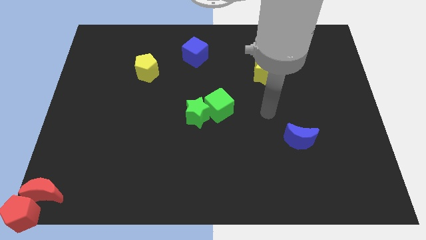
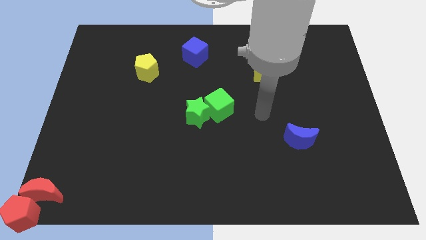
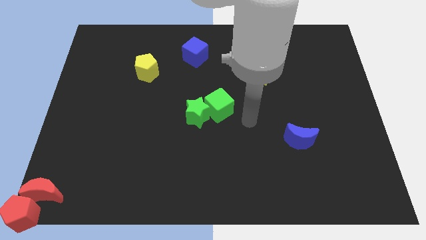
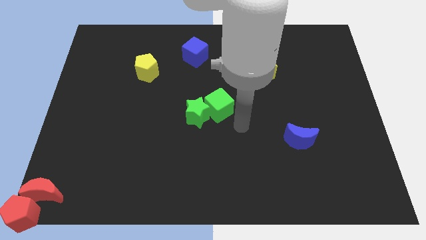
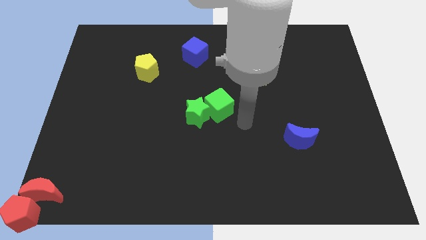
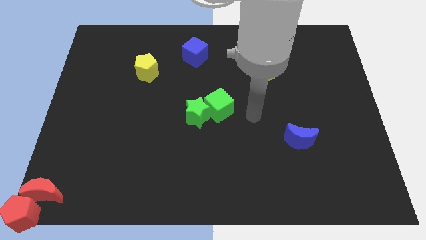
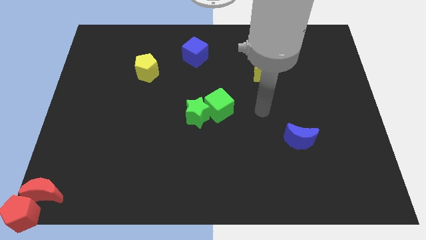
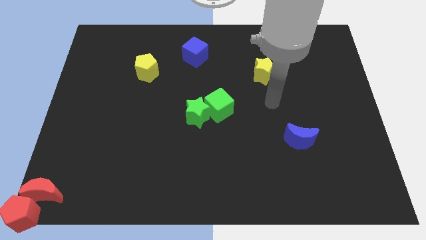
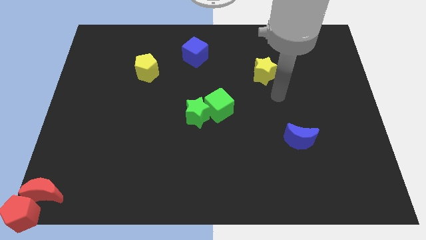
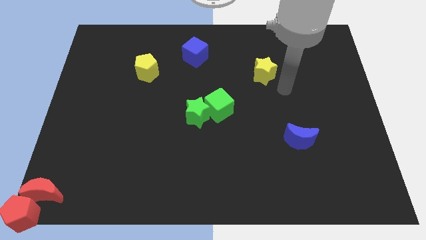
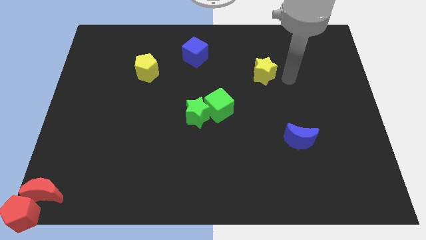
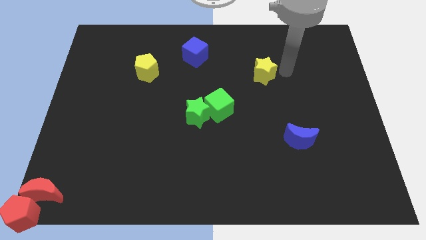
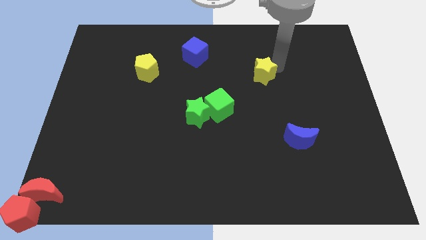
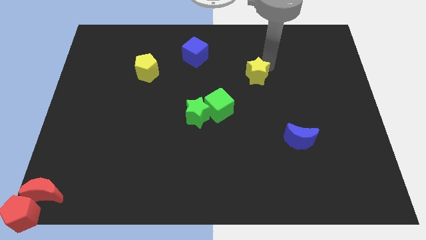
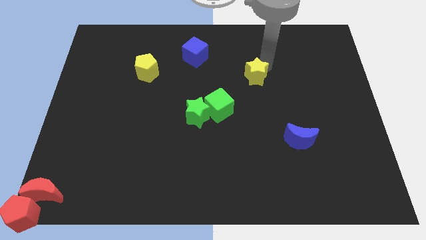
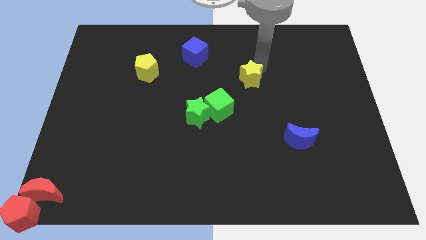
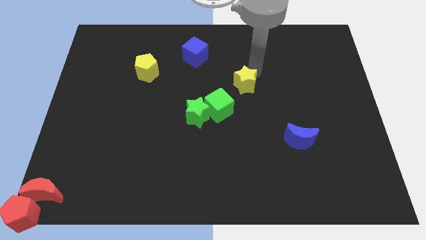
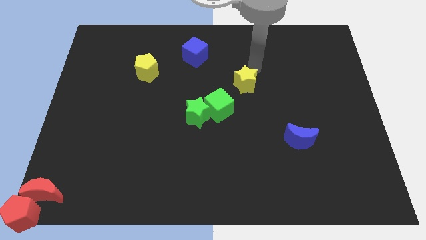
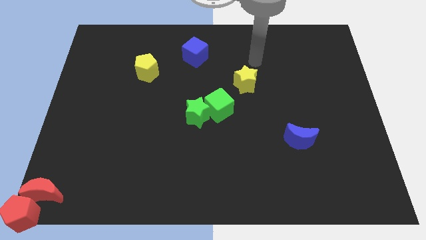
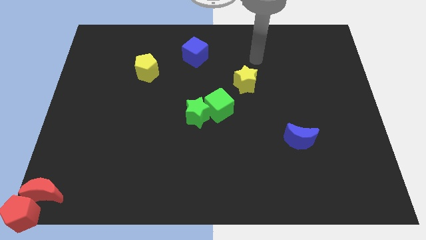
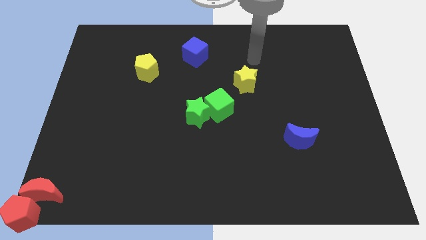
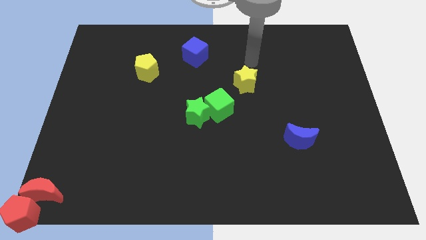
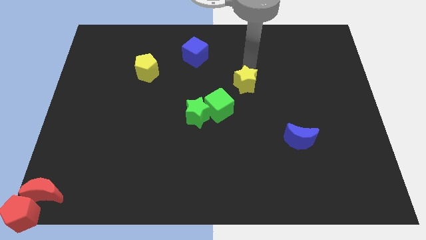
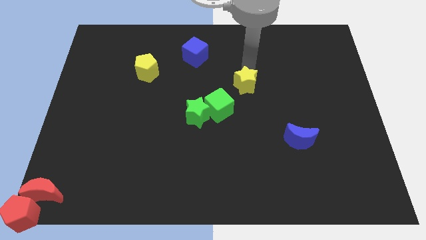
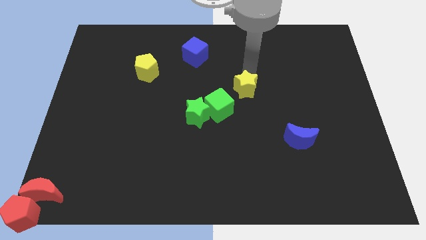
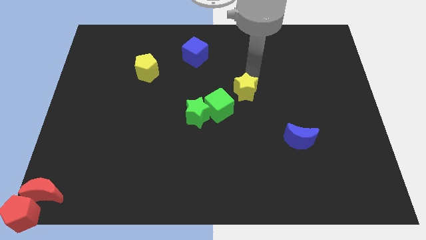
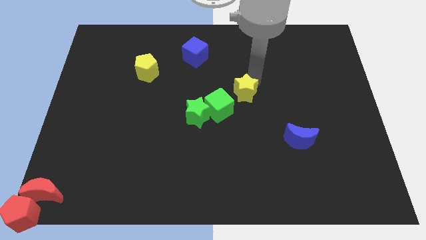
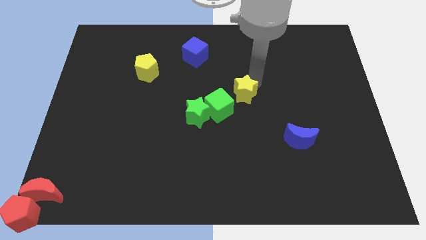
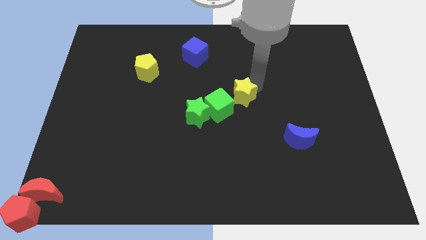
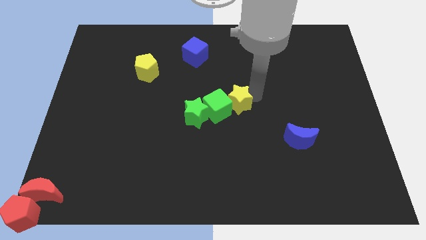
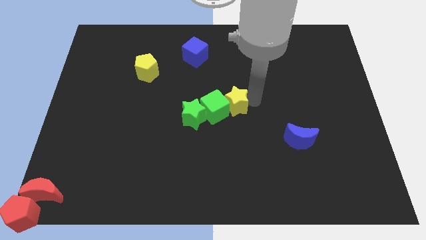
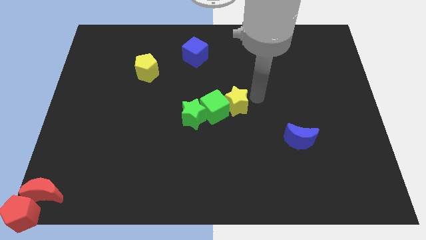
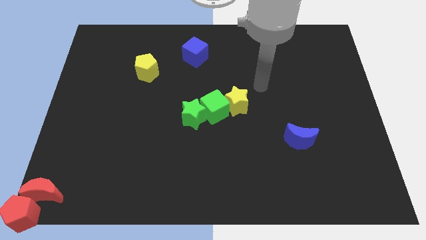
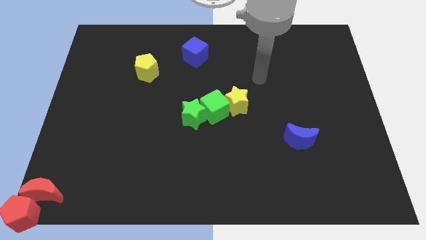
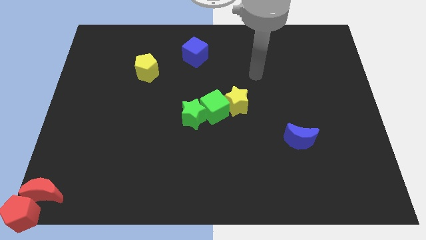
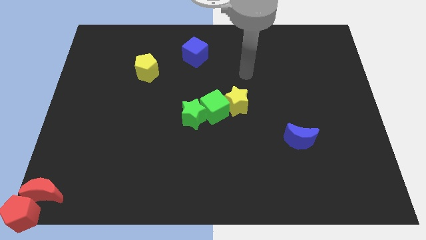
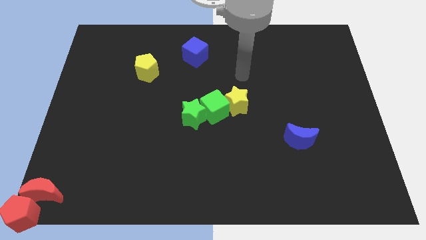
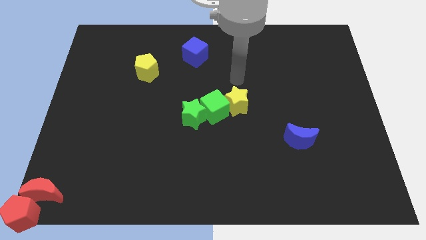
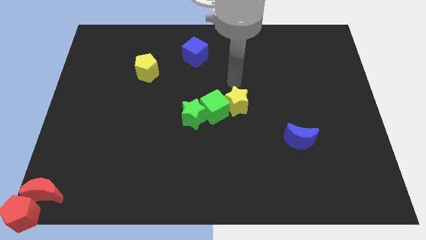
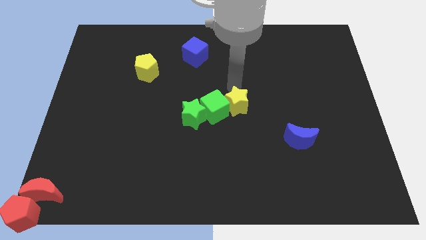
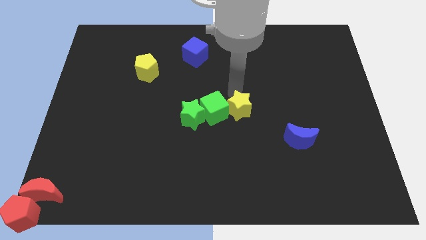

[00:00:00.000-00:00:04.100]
push the yellow star into the green blocks

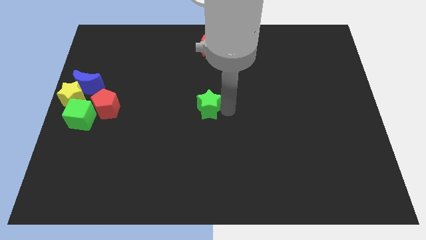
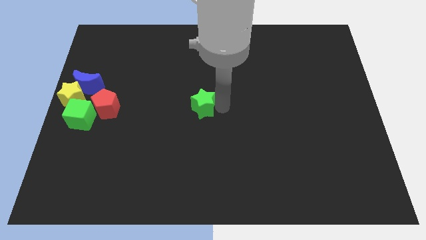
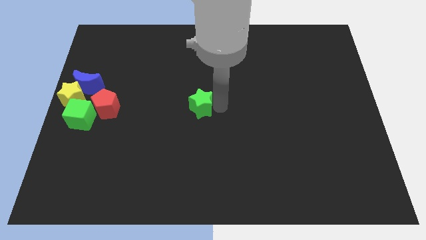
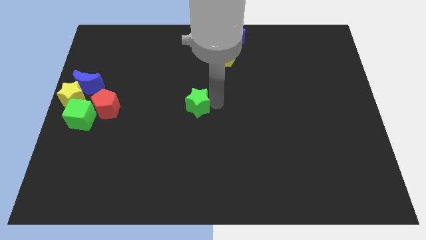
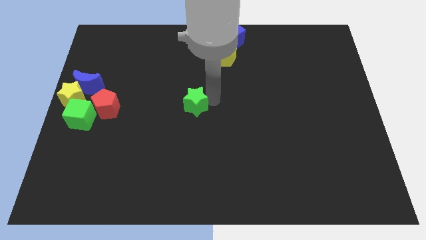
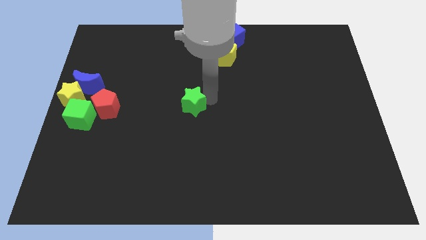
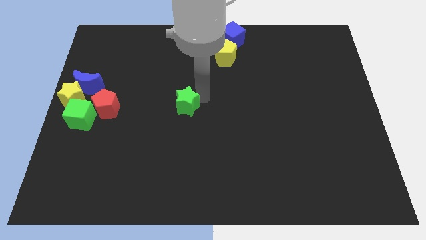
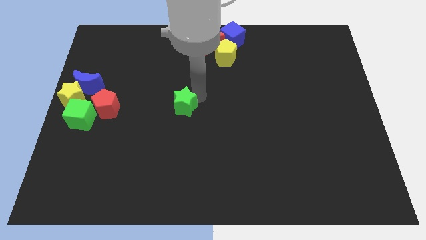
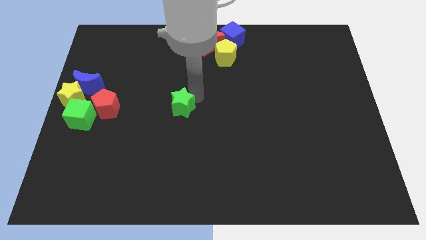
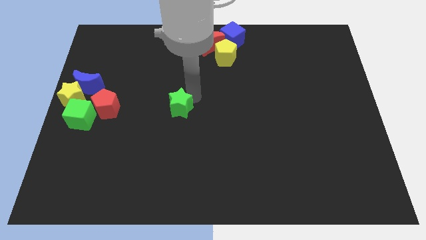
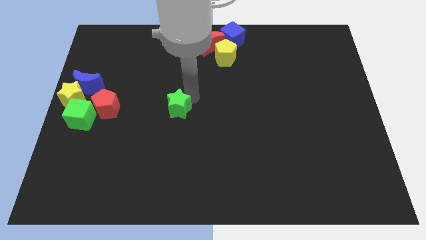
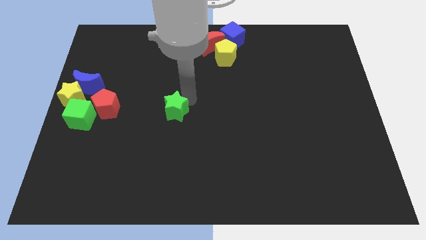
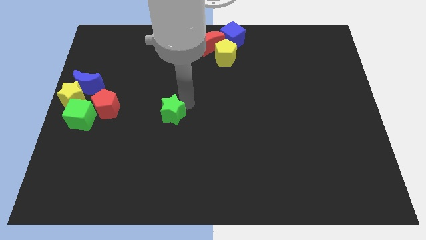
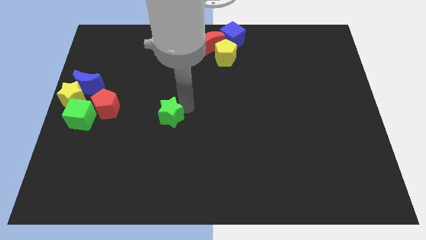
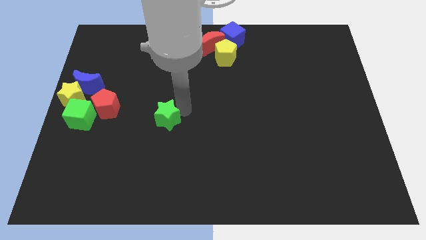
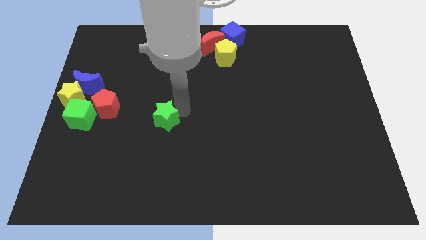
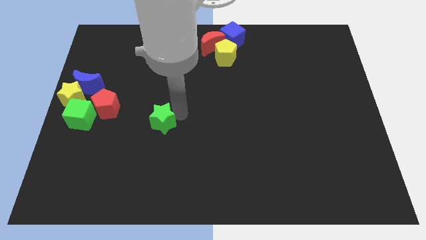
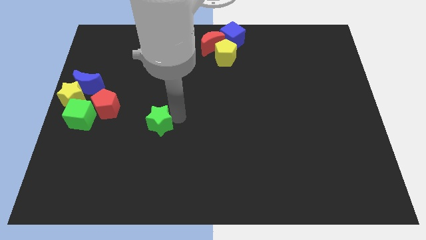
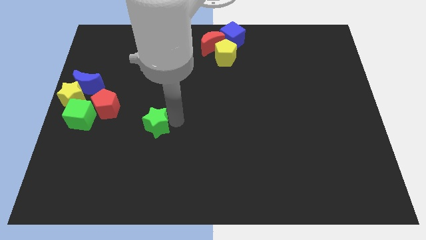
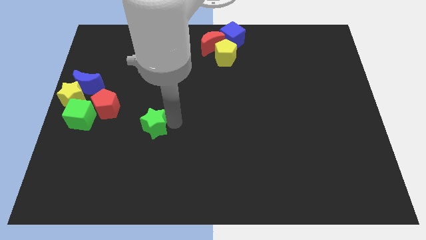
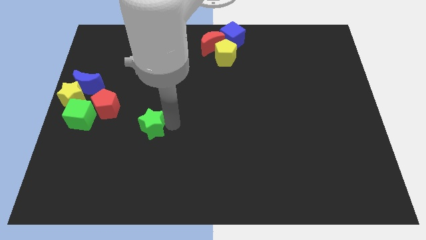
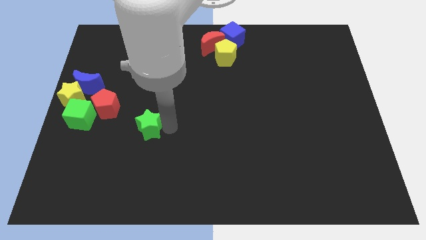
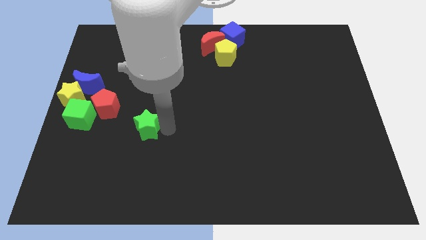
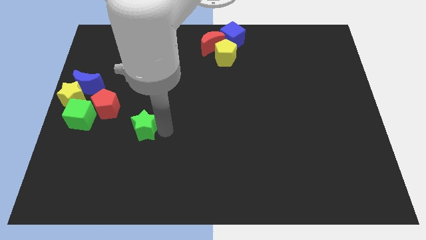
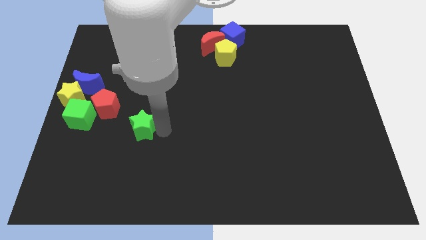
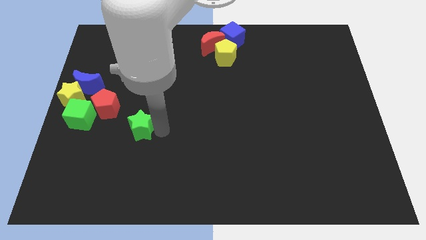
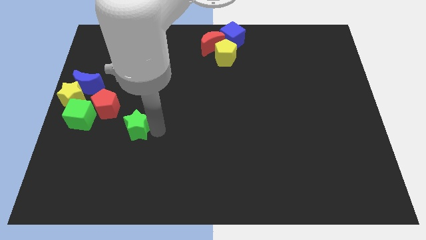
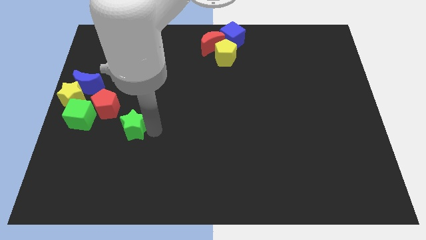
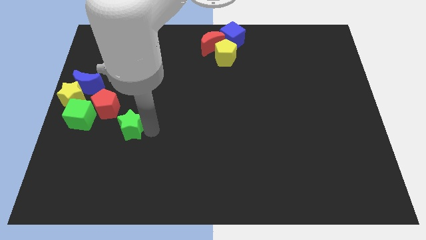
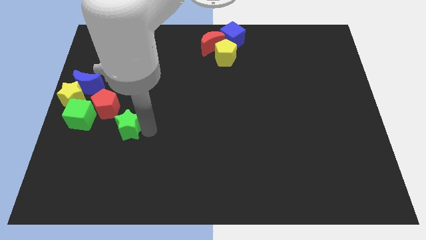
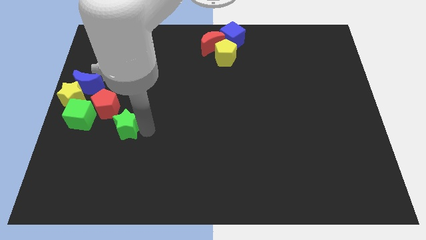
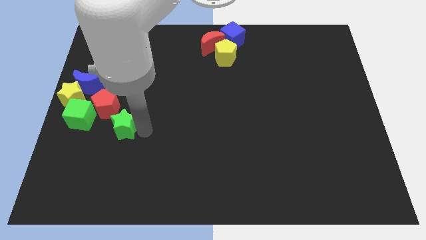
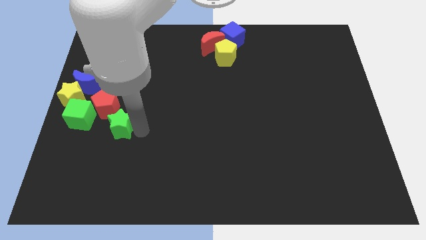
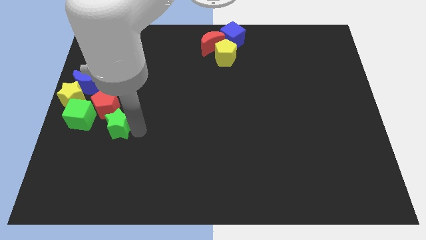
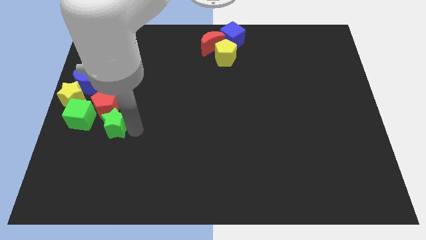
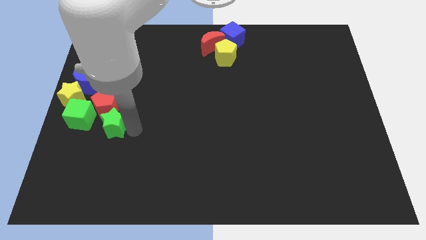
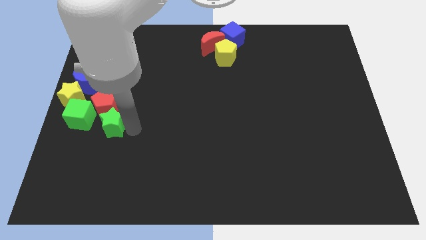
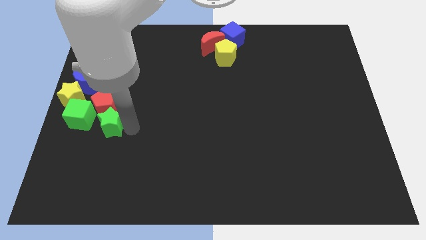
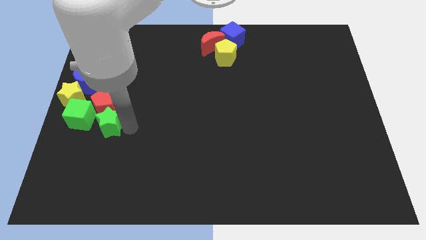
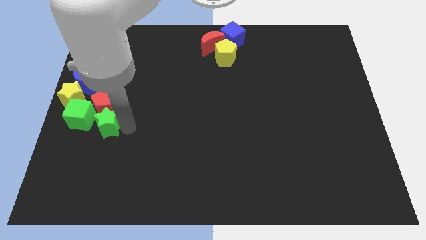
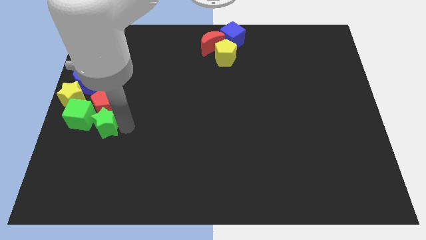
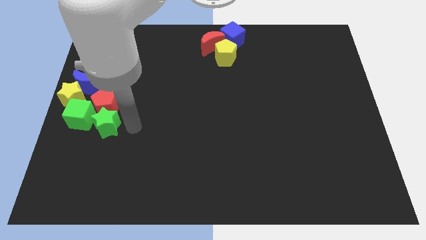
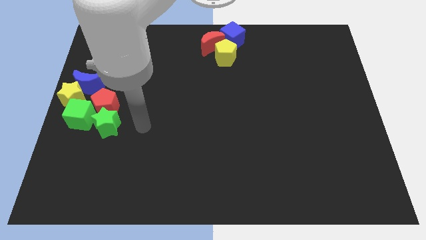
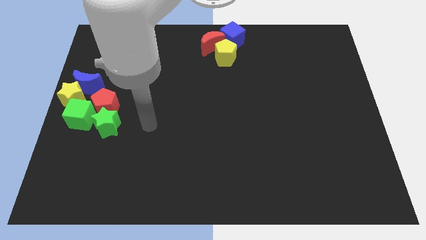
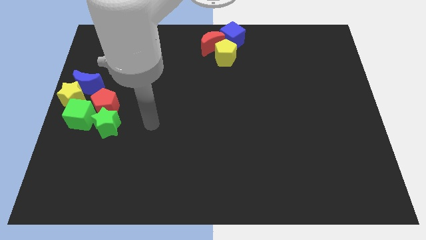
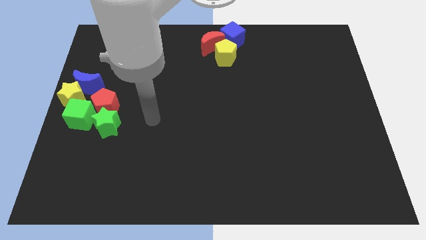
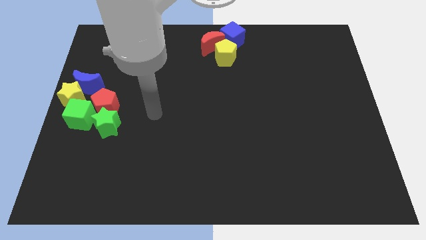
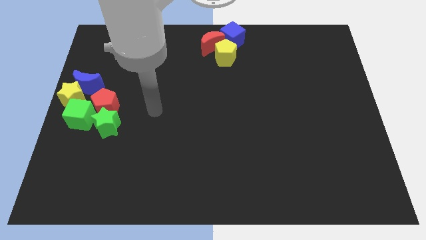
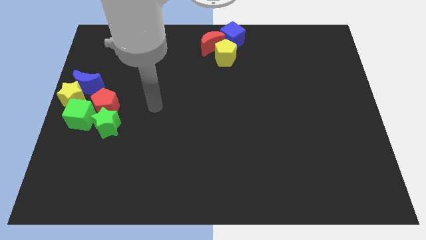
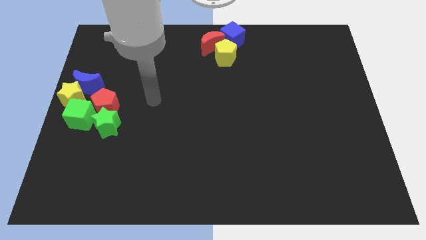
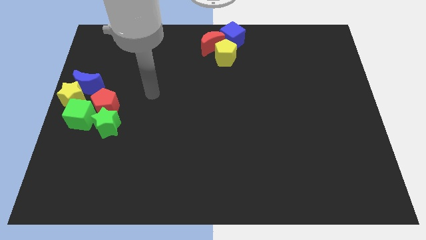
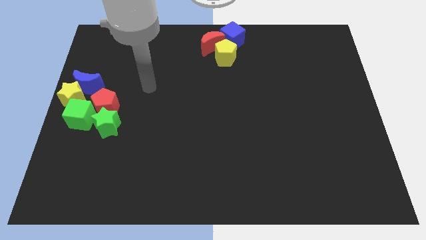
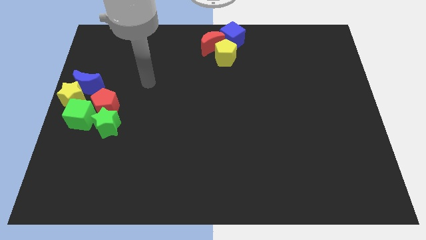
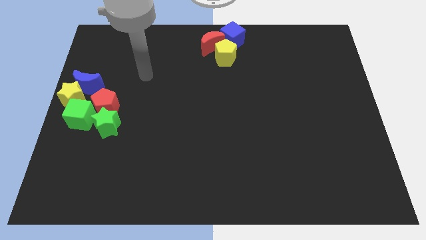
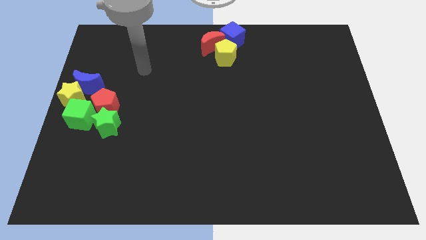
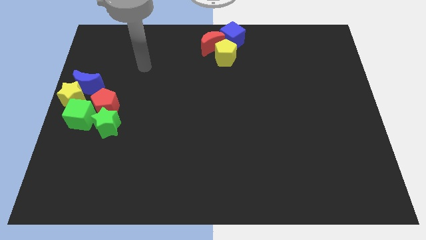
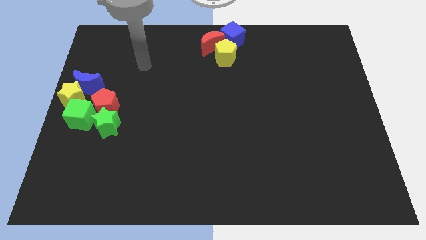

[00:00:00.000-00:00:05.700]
move the green star towards left side into the group of blocks
